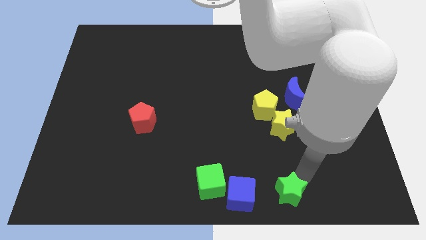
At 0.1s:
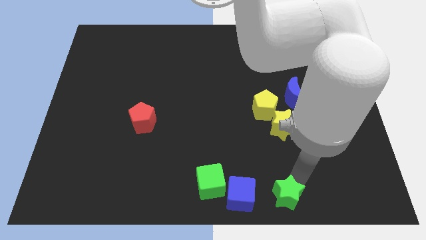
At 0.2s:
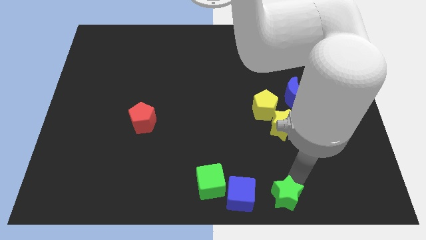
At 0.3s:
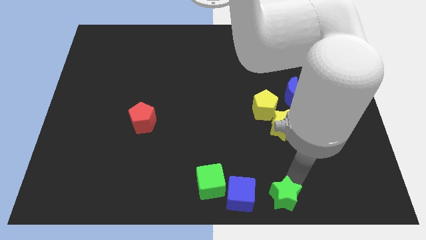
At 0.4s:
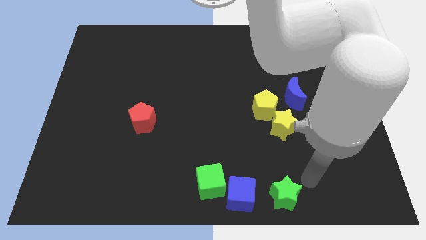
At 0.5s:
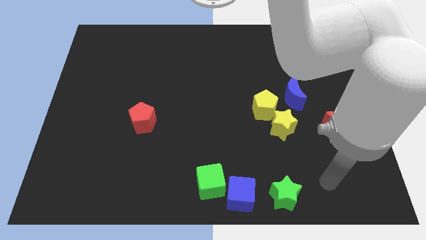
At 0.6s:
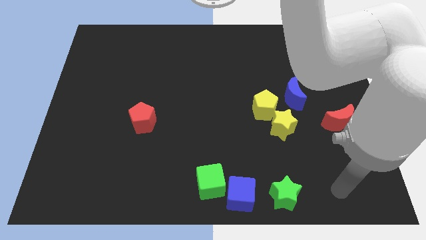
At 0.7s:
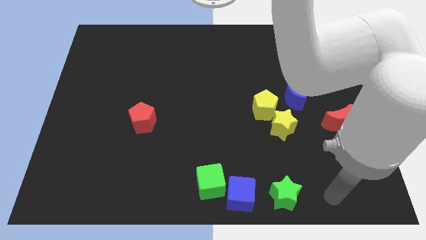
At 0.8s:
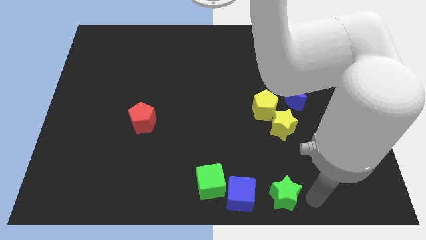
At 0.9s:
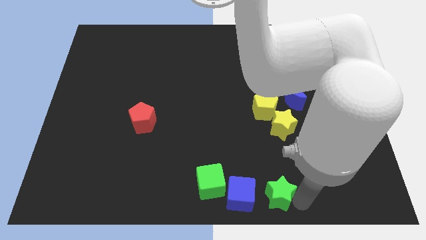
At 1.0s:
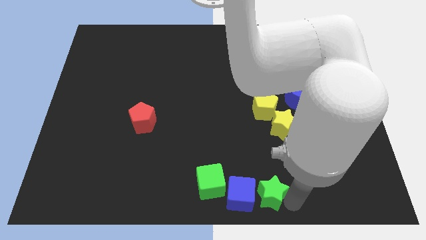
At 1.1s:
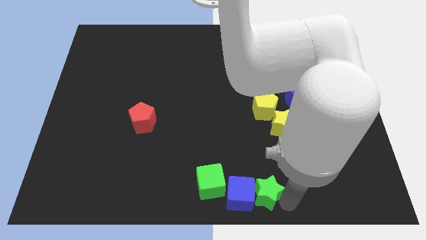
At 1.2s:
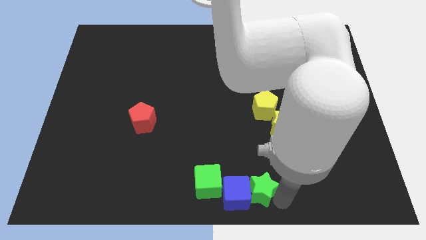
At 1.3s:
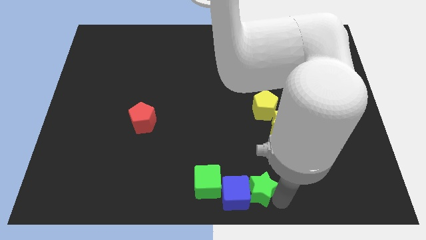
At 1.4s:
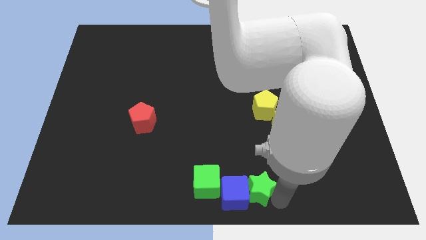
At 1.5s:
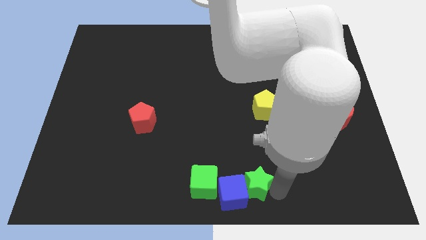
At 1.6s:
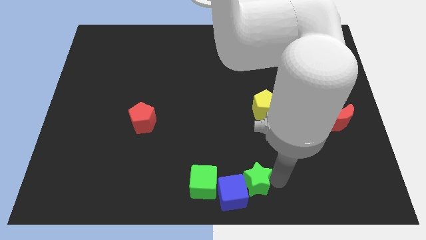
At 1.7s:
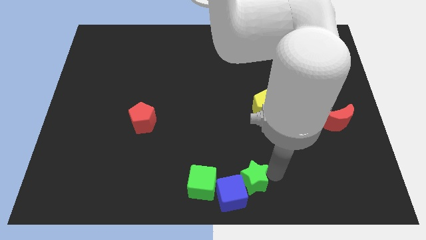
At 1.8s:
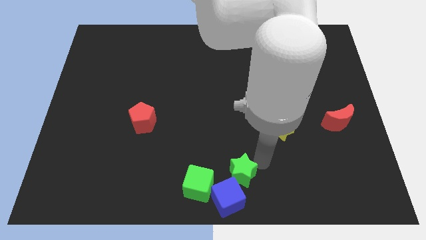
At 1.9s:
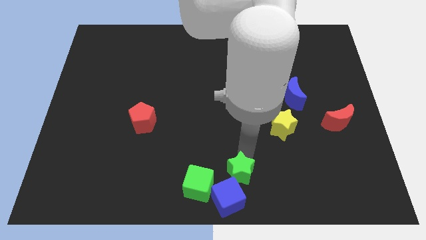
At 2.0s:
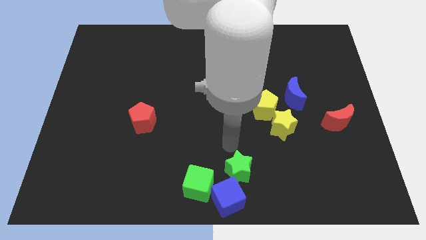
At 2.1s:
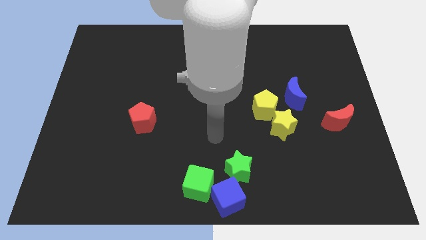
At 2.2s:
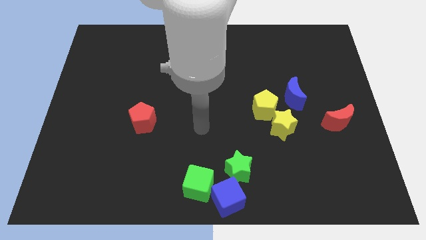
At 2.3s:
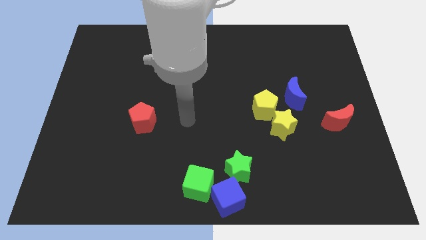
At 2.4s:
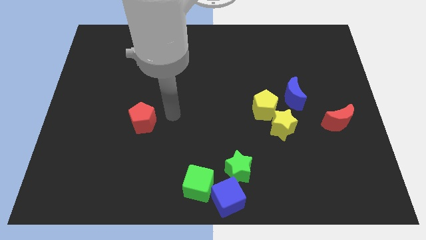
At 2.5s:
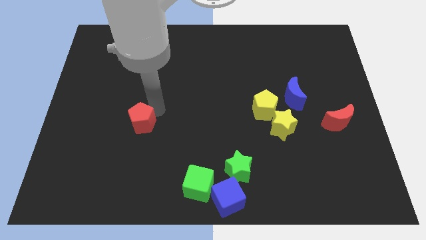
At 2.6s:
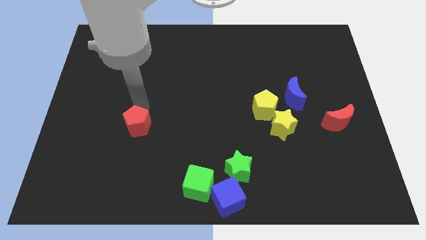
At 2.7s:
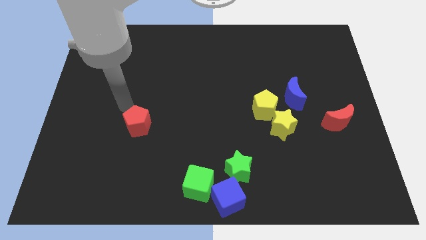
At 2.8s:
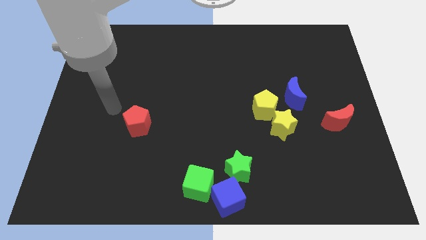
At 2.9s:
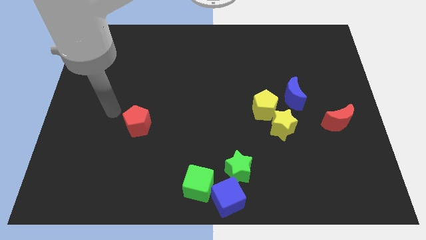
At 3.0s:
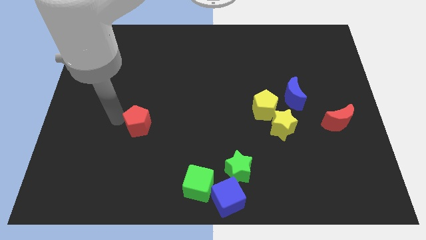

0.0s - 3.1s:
push the green star to the top of the blue cube

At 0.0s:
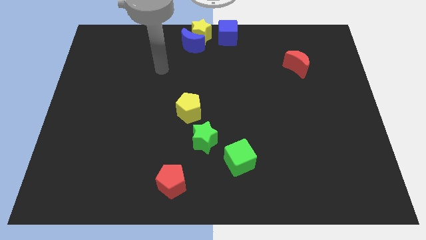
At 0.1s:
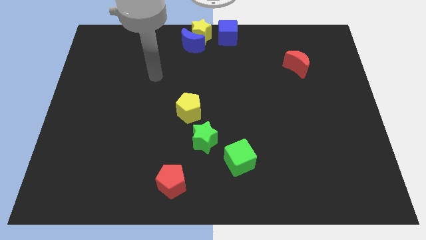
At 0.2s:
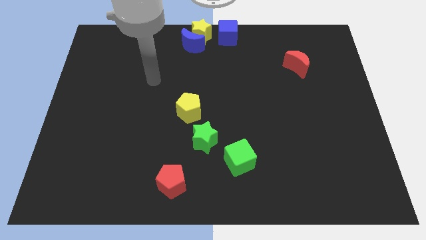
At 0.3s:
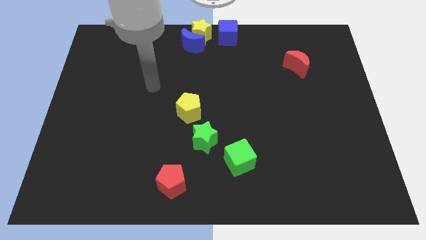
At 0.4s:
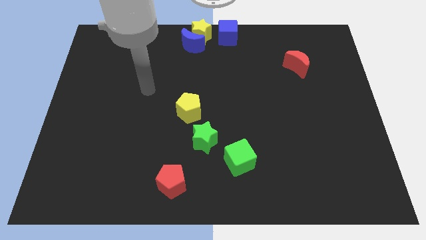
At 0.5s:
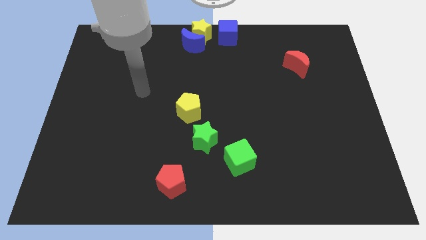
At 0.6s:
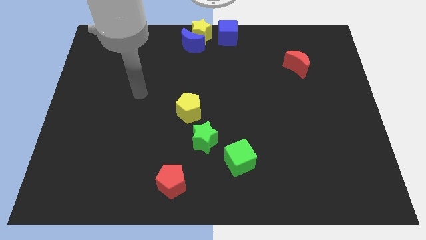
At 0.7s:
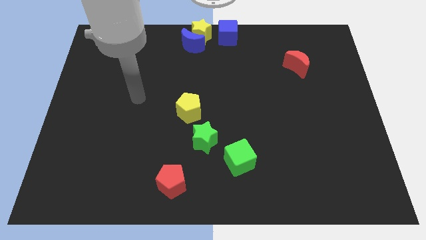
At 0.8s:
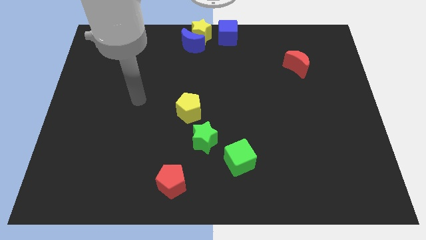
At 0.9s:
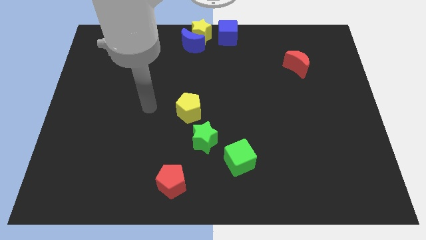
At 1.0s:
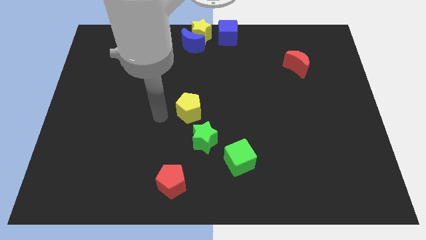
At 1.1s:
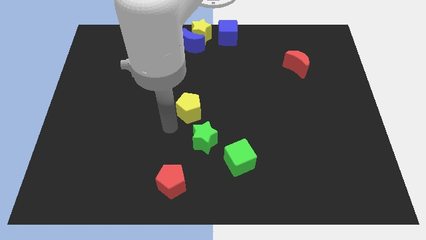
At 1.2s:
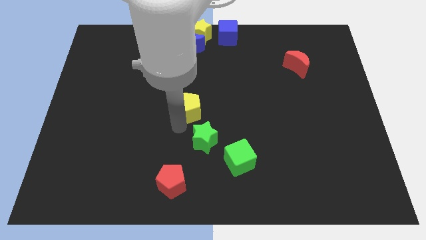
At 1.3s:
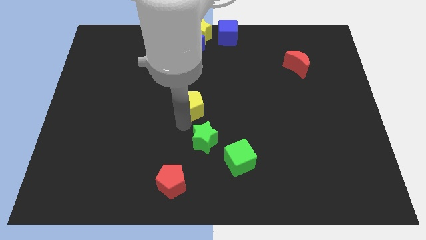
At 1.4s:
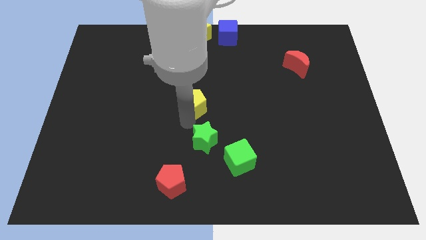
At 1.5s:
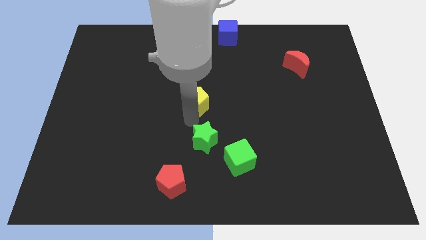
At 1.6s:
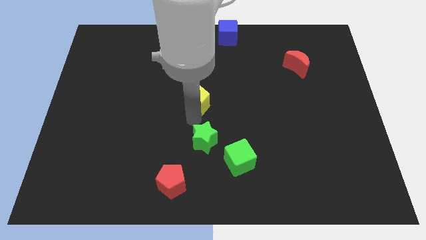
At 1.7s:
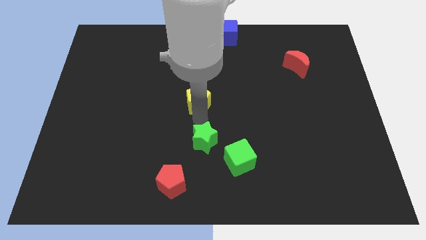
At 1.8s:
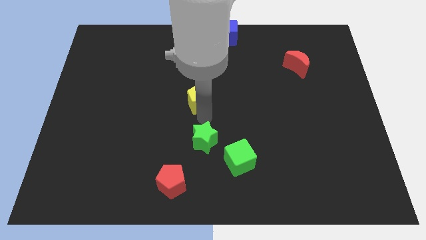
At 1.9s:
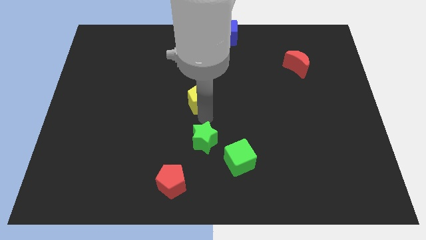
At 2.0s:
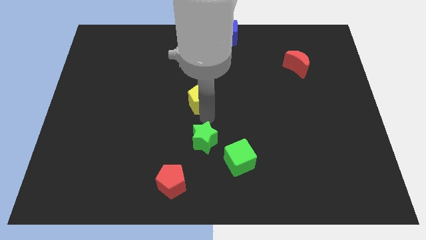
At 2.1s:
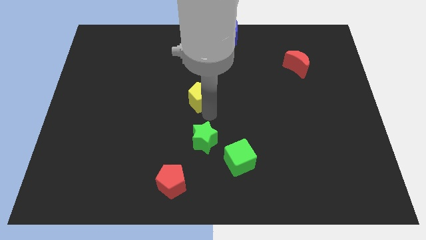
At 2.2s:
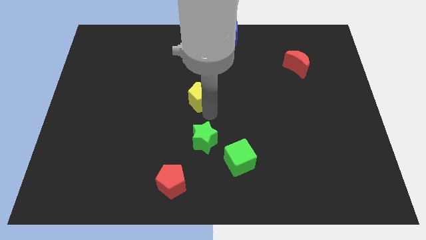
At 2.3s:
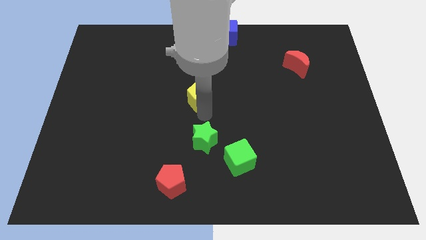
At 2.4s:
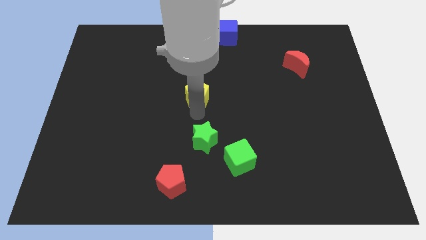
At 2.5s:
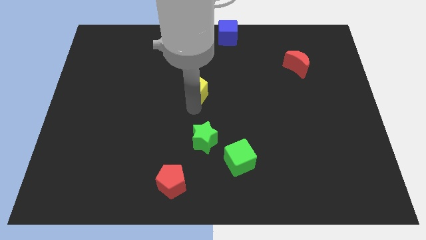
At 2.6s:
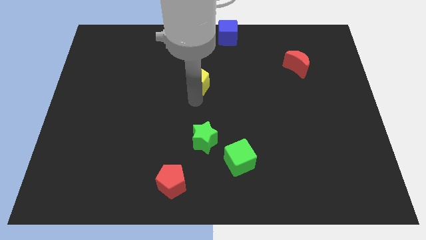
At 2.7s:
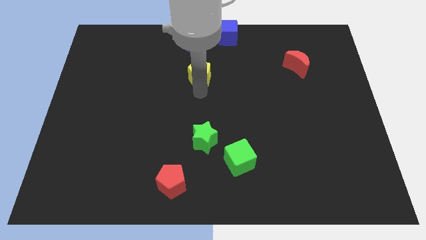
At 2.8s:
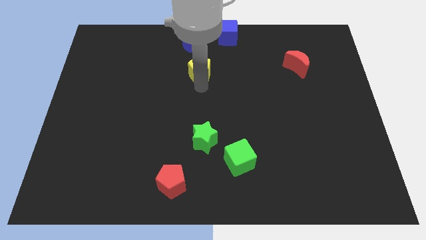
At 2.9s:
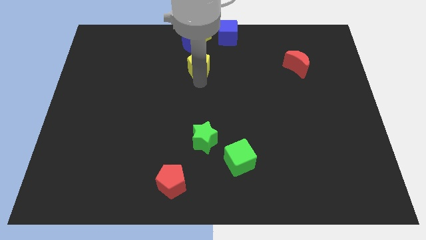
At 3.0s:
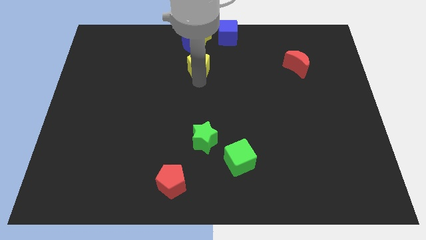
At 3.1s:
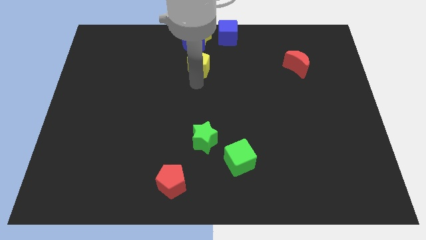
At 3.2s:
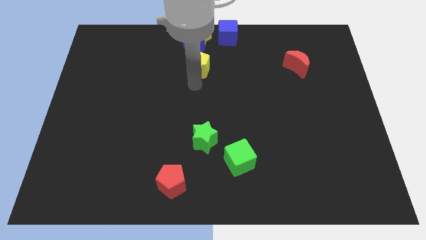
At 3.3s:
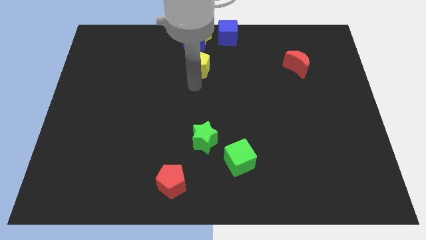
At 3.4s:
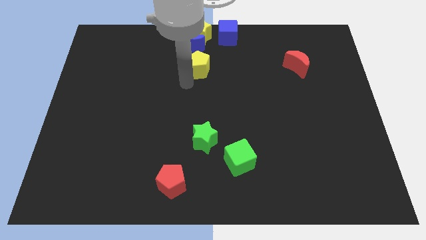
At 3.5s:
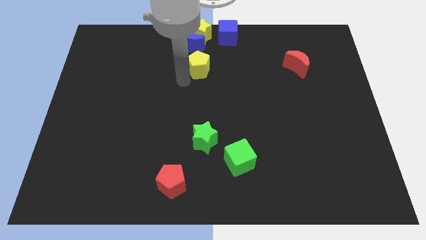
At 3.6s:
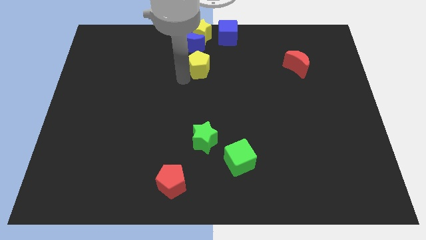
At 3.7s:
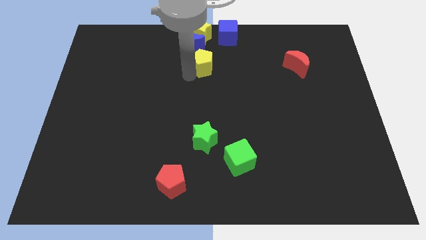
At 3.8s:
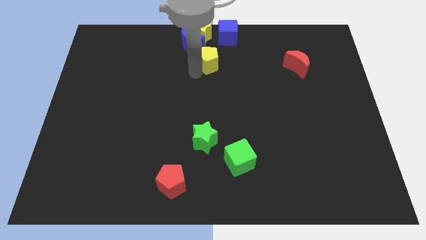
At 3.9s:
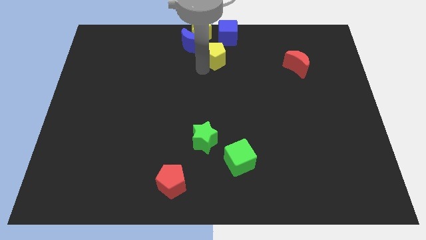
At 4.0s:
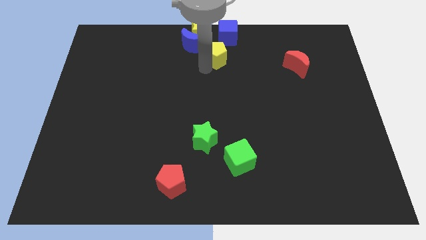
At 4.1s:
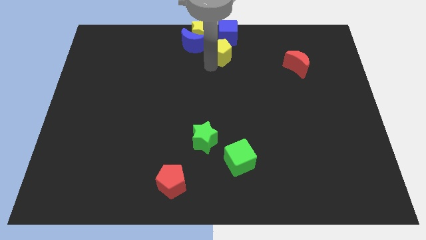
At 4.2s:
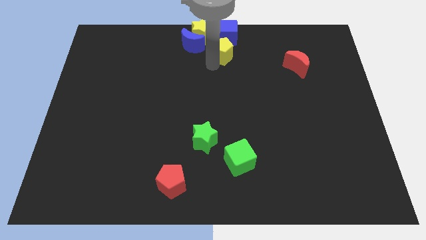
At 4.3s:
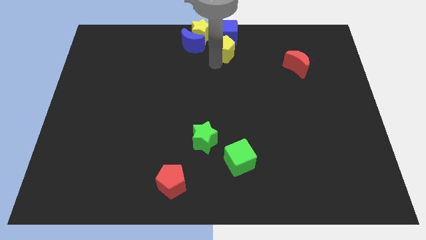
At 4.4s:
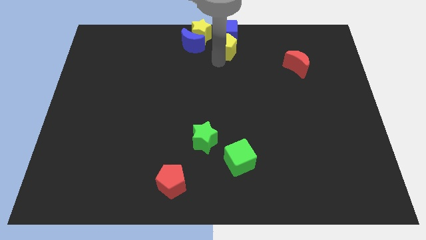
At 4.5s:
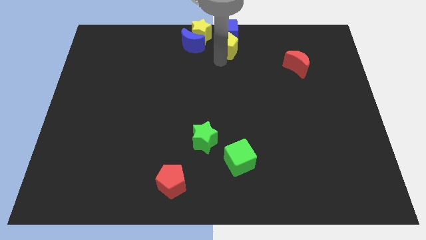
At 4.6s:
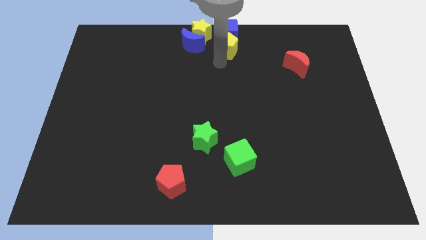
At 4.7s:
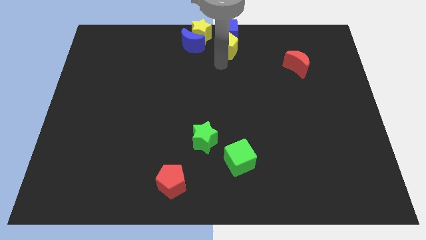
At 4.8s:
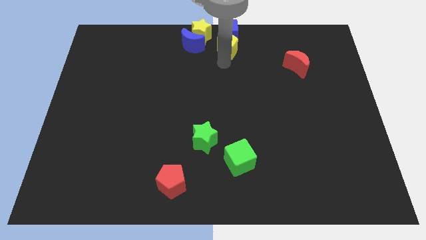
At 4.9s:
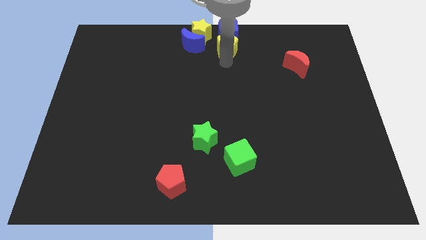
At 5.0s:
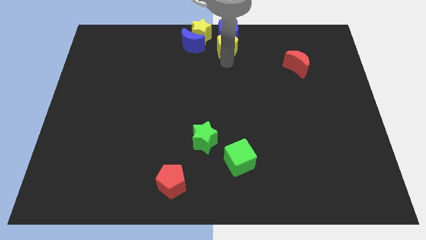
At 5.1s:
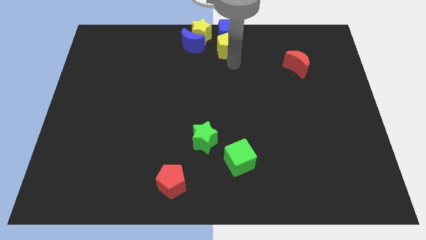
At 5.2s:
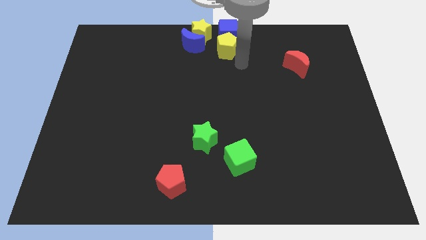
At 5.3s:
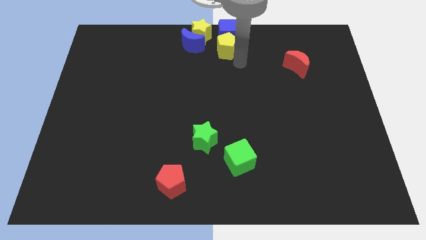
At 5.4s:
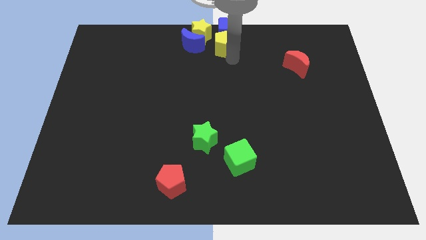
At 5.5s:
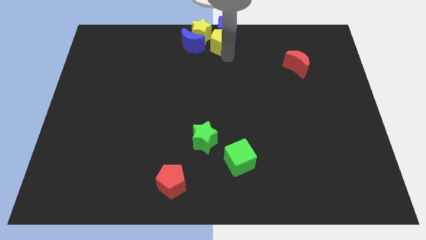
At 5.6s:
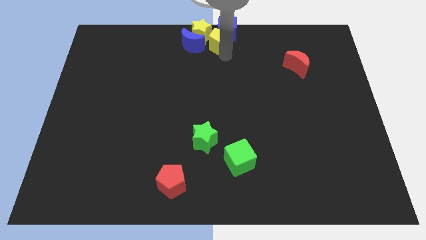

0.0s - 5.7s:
push the yellow pentagon into the blue cube
